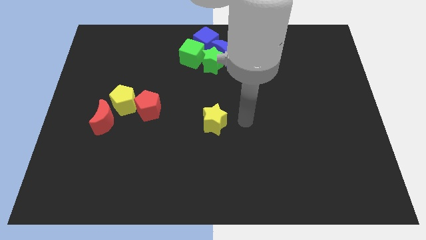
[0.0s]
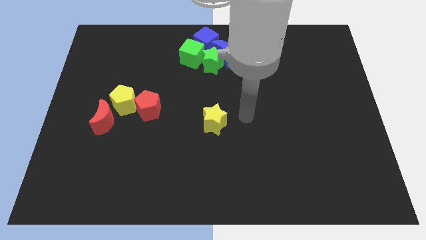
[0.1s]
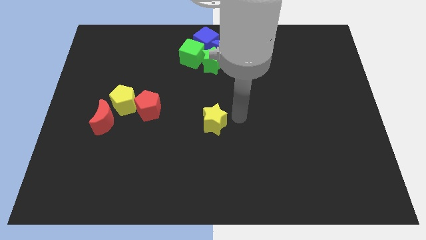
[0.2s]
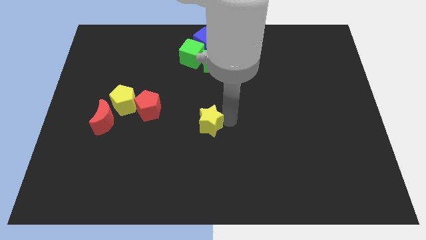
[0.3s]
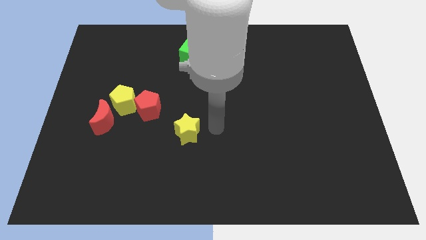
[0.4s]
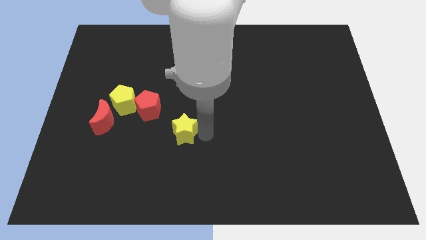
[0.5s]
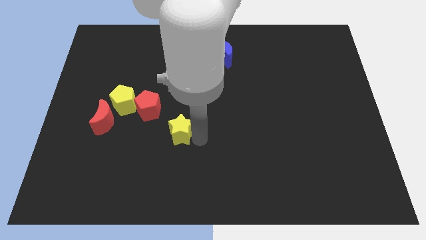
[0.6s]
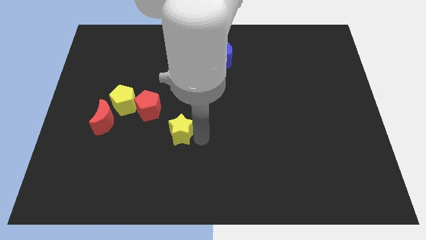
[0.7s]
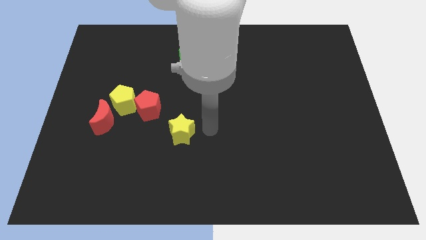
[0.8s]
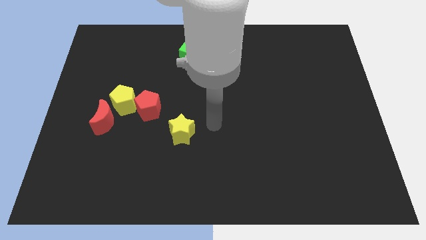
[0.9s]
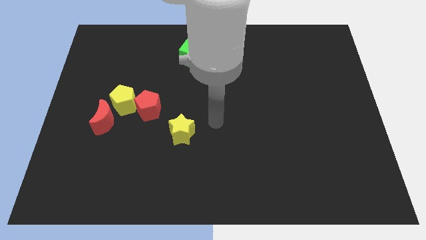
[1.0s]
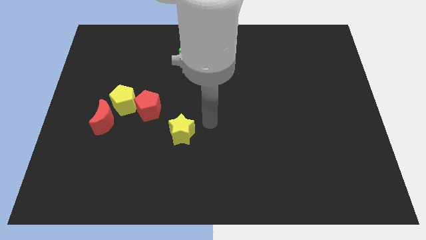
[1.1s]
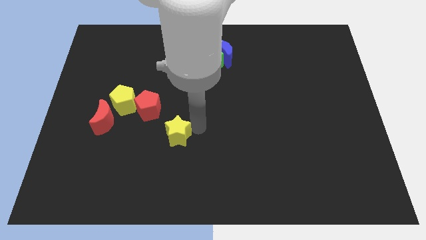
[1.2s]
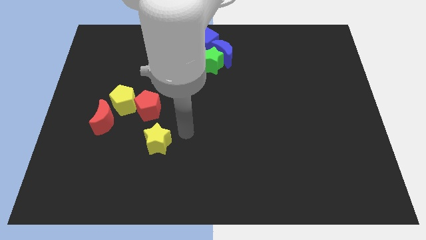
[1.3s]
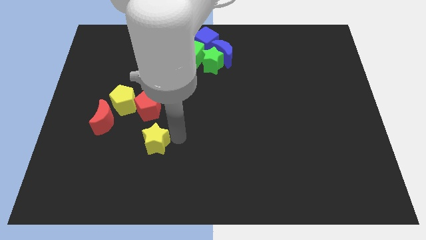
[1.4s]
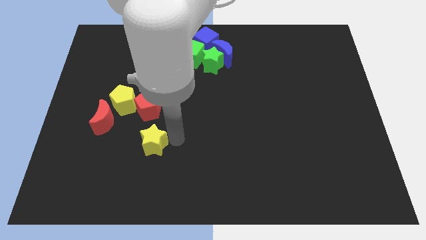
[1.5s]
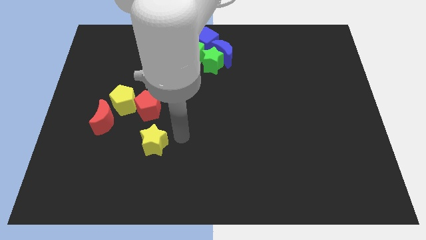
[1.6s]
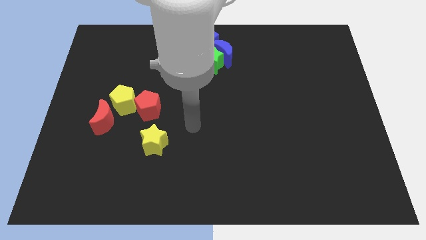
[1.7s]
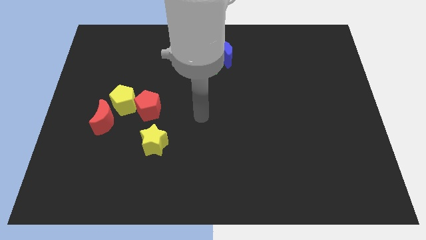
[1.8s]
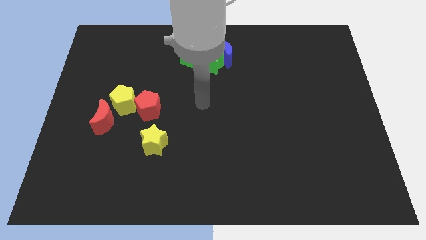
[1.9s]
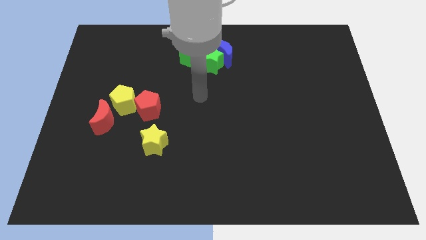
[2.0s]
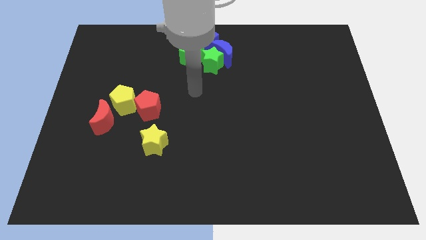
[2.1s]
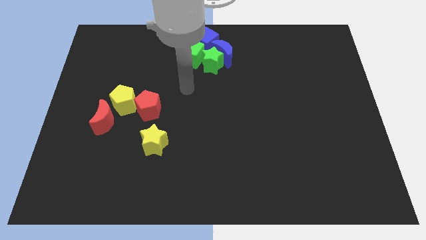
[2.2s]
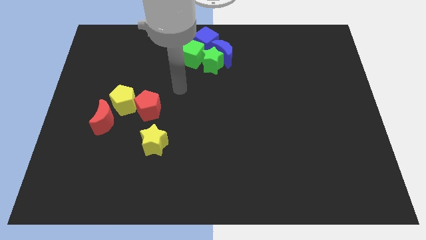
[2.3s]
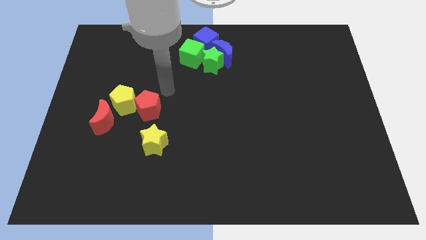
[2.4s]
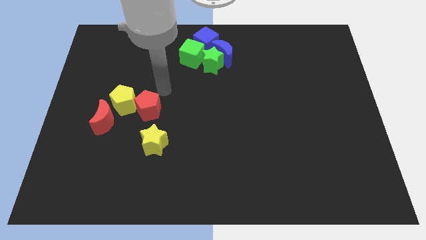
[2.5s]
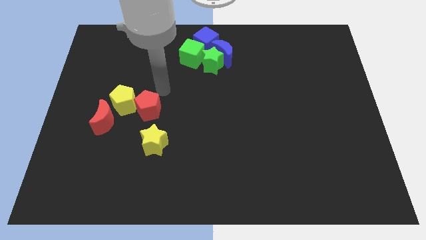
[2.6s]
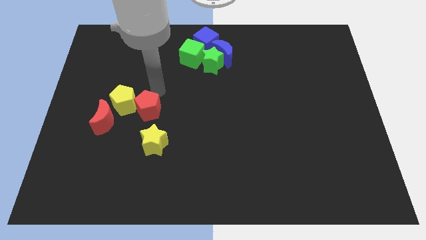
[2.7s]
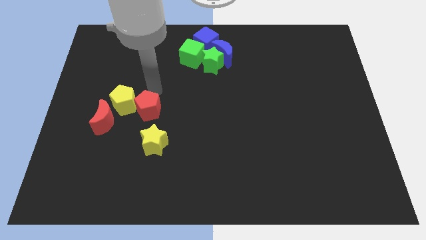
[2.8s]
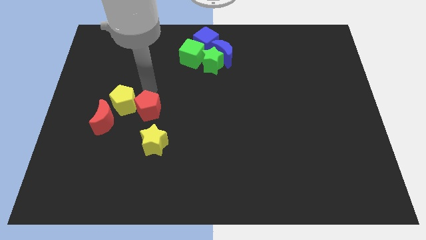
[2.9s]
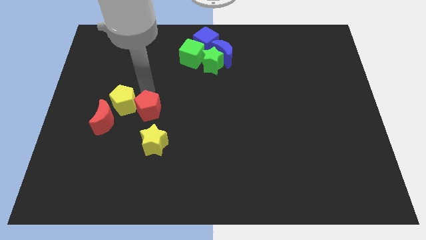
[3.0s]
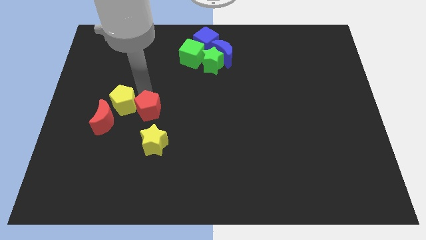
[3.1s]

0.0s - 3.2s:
move the yellow star to the bottom of the red pentagon

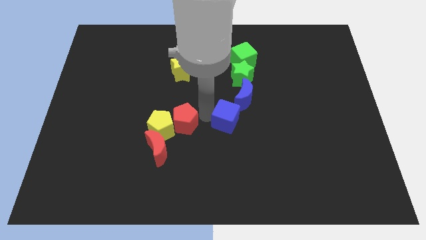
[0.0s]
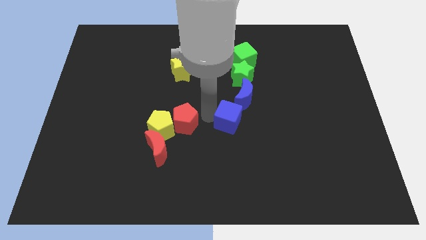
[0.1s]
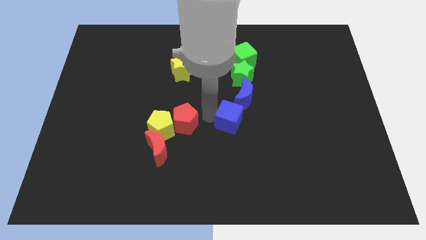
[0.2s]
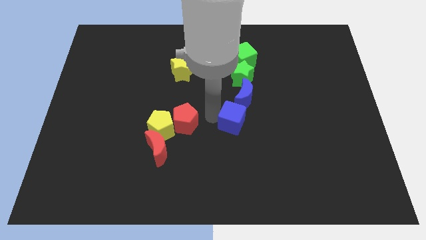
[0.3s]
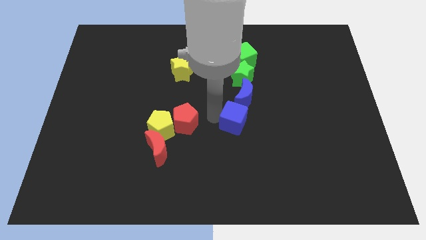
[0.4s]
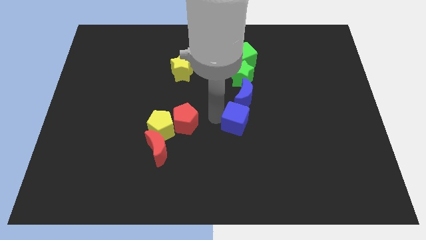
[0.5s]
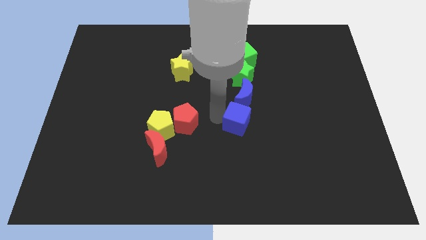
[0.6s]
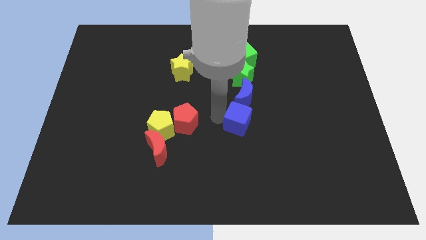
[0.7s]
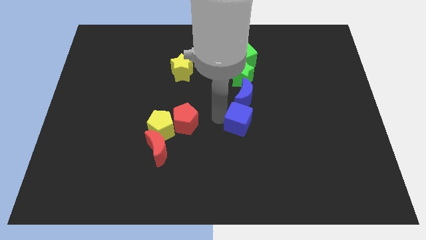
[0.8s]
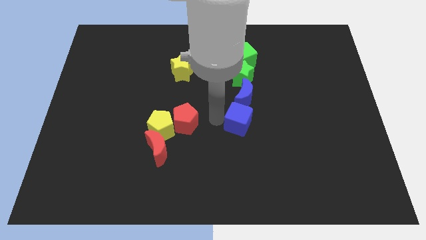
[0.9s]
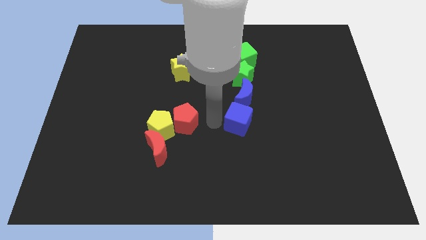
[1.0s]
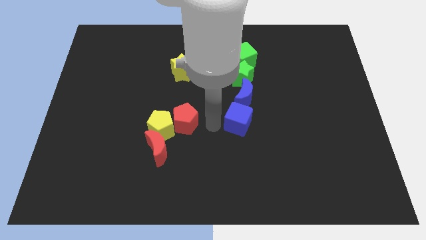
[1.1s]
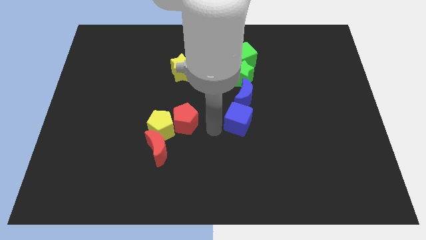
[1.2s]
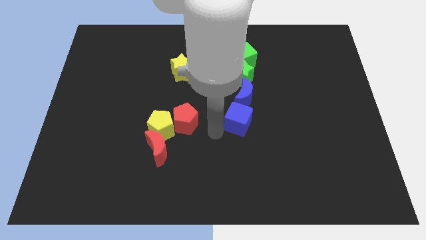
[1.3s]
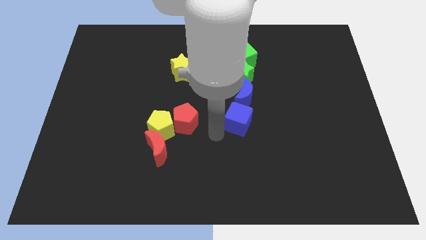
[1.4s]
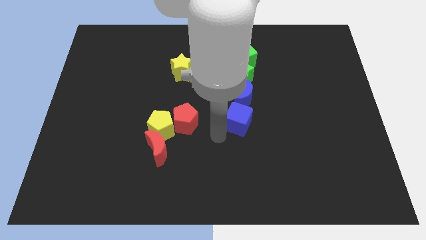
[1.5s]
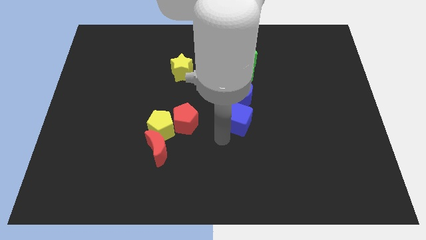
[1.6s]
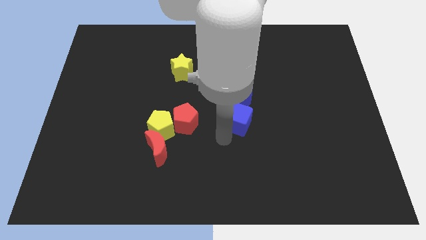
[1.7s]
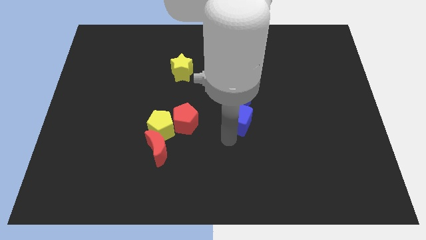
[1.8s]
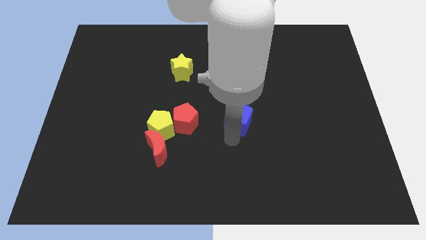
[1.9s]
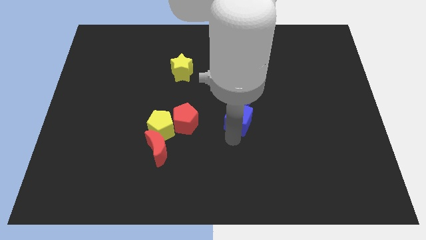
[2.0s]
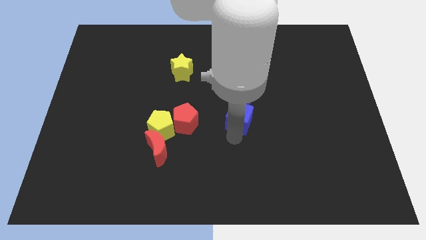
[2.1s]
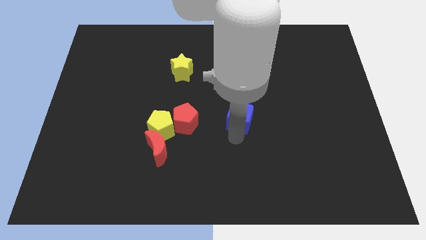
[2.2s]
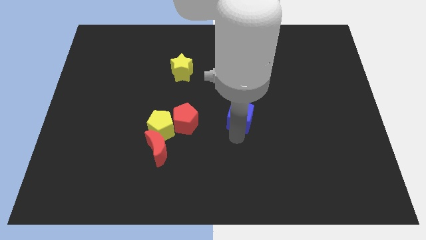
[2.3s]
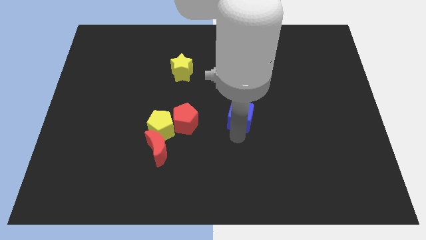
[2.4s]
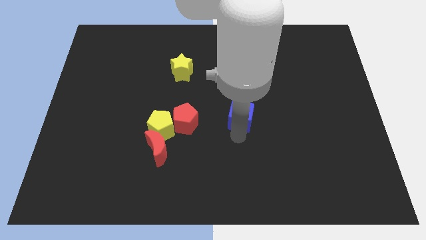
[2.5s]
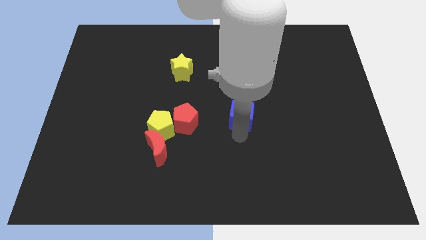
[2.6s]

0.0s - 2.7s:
move the blue cube to the bottom of the blue crescent

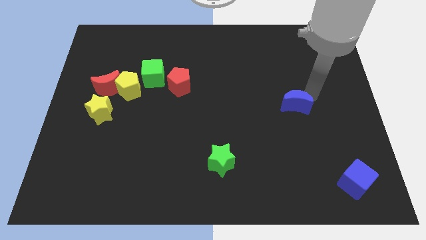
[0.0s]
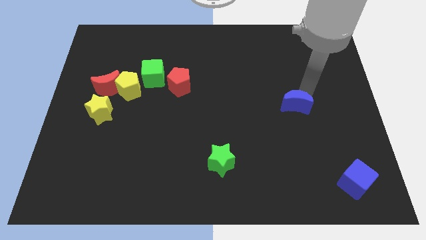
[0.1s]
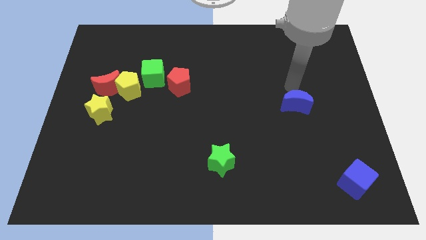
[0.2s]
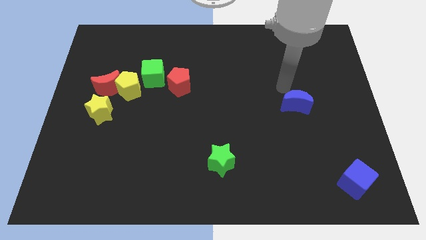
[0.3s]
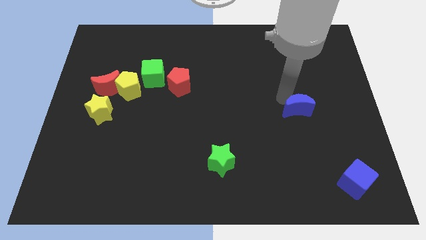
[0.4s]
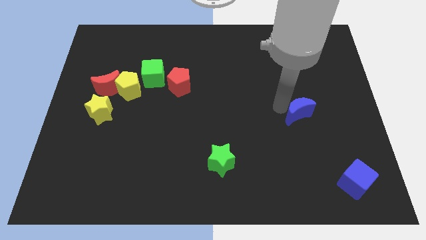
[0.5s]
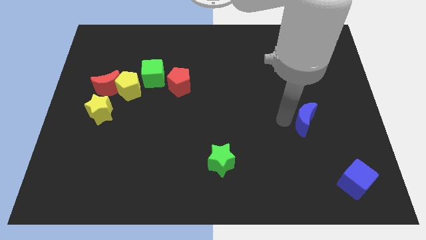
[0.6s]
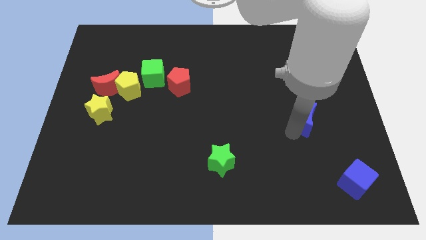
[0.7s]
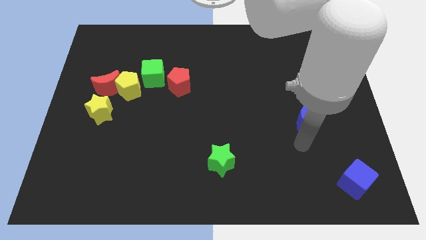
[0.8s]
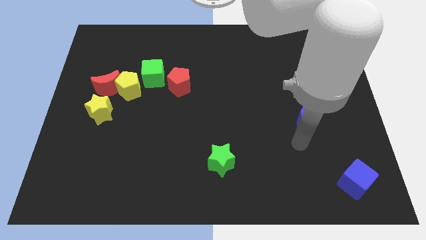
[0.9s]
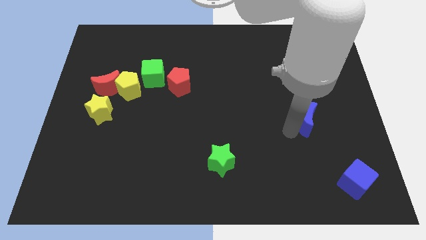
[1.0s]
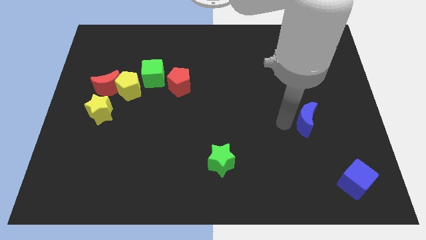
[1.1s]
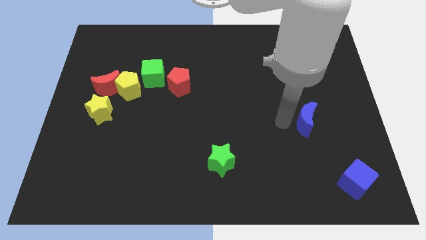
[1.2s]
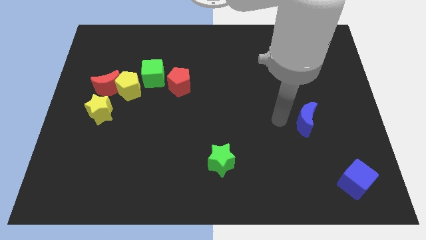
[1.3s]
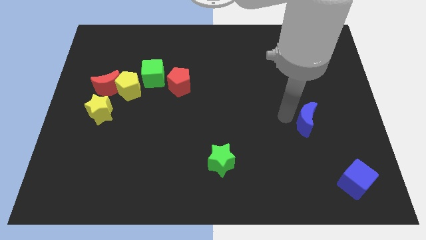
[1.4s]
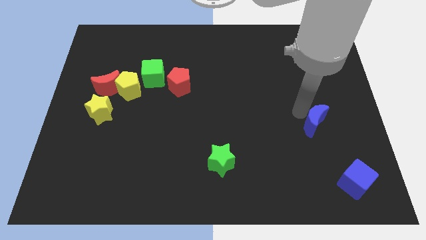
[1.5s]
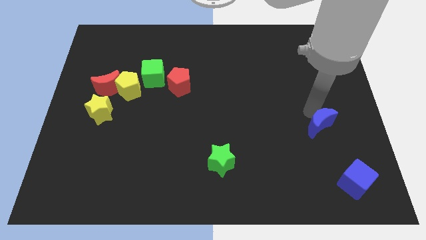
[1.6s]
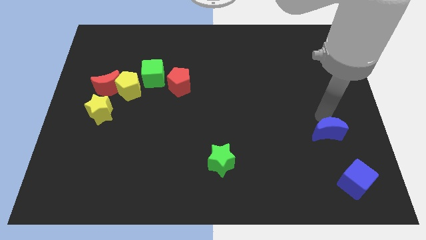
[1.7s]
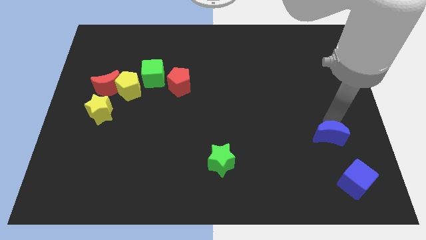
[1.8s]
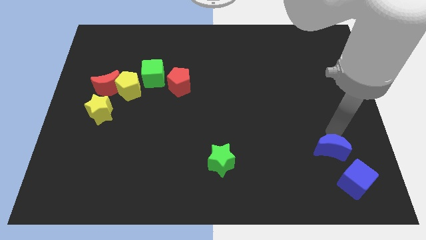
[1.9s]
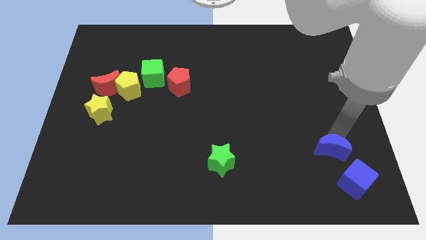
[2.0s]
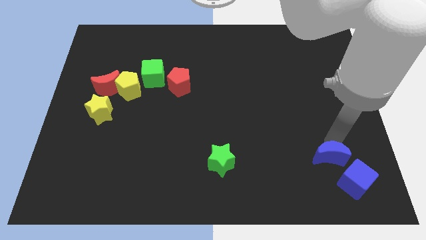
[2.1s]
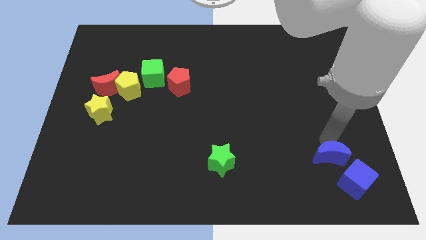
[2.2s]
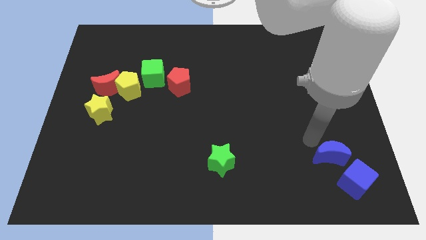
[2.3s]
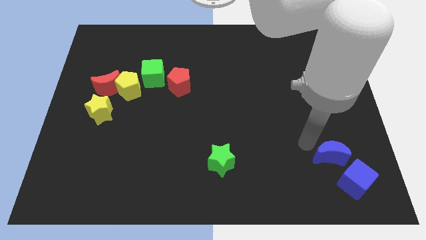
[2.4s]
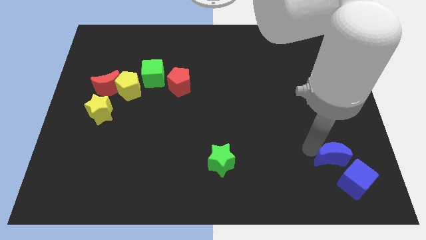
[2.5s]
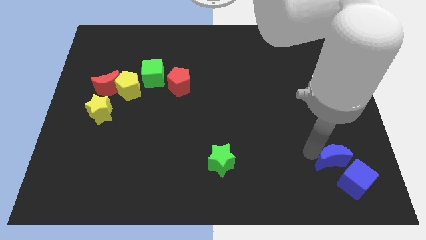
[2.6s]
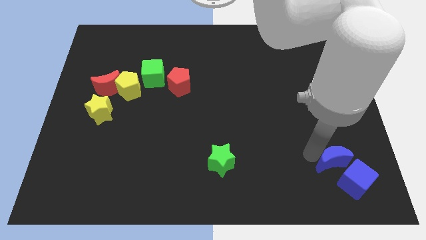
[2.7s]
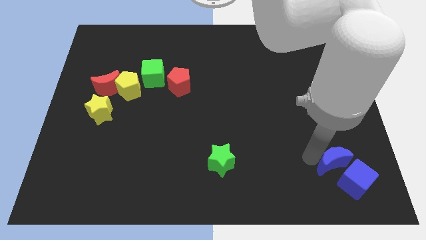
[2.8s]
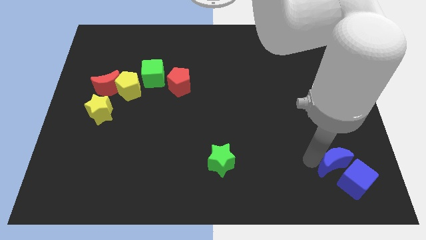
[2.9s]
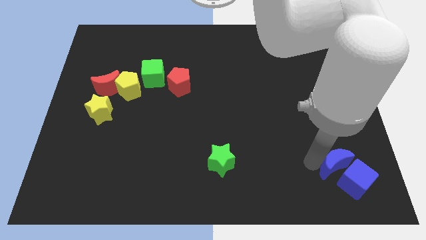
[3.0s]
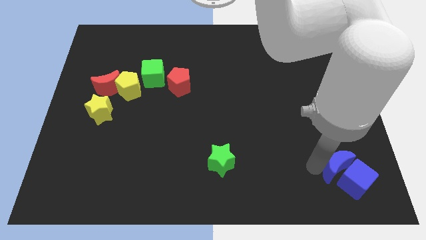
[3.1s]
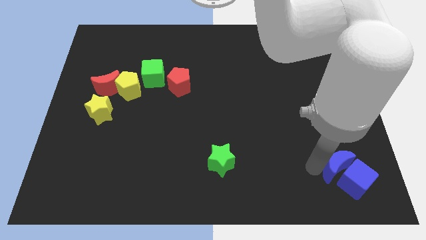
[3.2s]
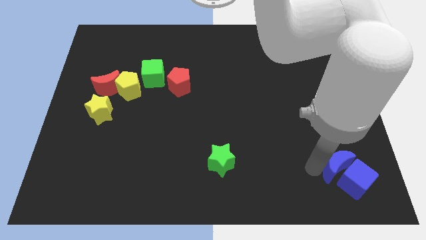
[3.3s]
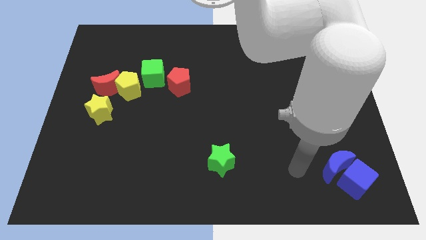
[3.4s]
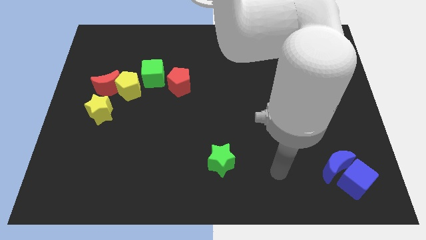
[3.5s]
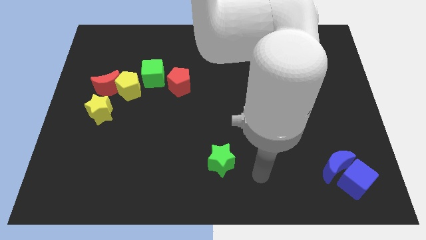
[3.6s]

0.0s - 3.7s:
move blue crescent to the left of the blue cube
